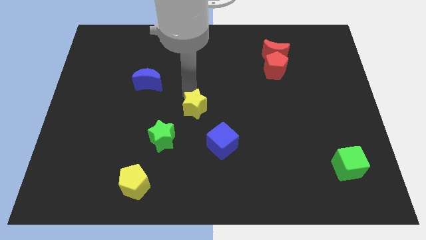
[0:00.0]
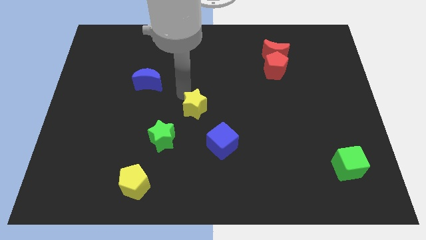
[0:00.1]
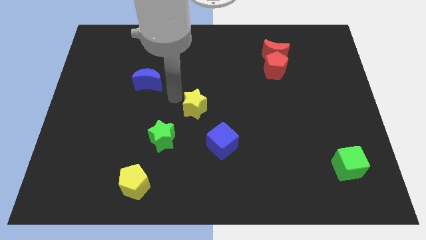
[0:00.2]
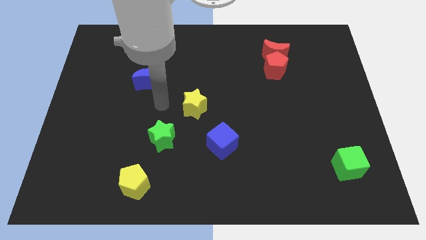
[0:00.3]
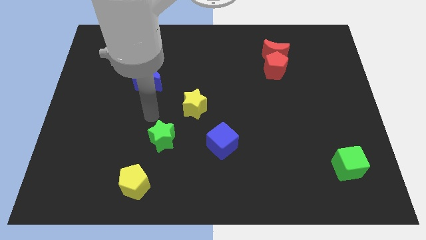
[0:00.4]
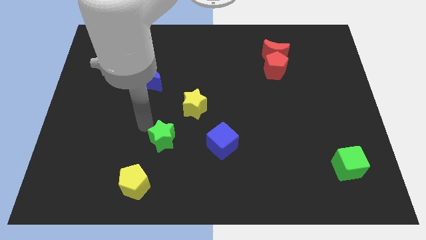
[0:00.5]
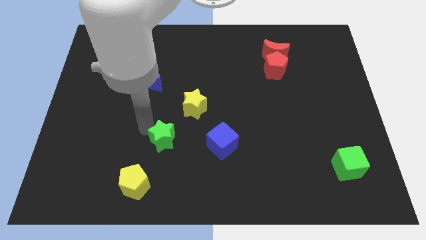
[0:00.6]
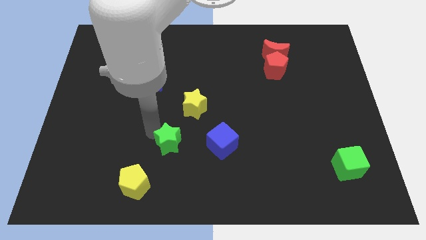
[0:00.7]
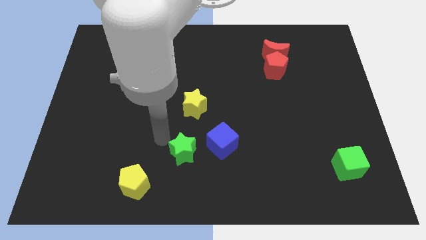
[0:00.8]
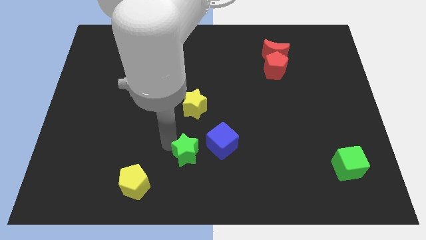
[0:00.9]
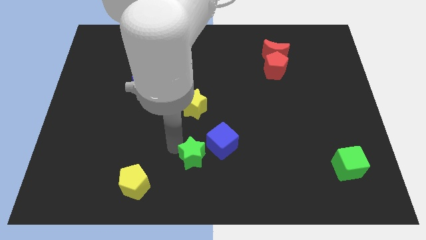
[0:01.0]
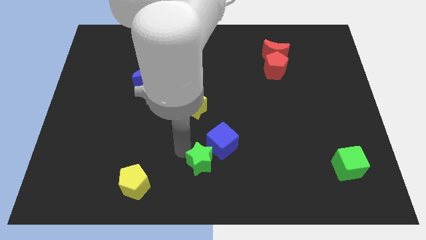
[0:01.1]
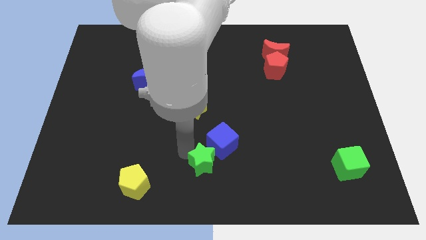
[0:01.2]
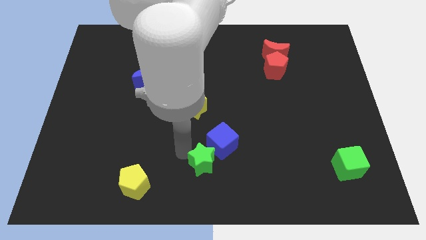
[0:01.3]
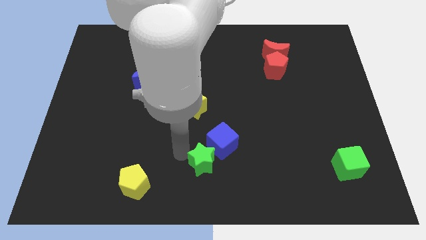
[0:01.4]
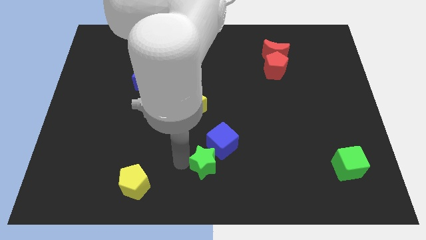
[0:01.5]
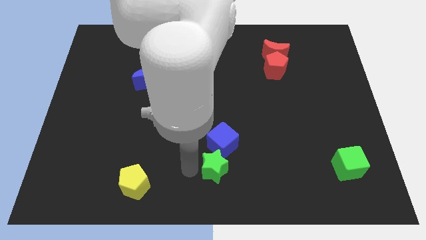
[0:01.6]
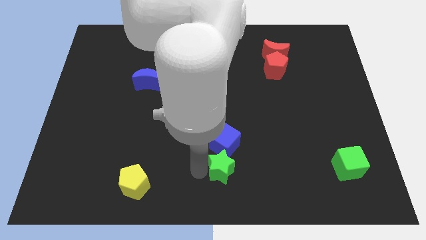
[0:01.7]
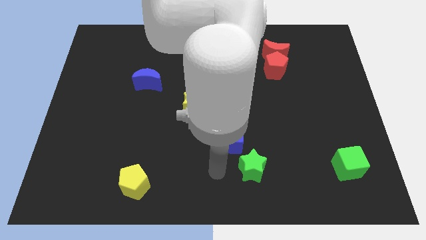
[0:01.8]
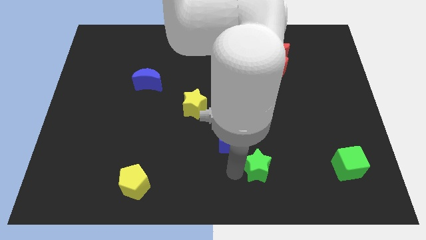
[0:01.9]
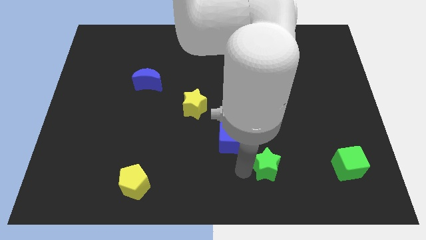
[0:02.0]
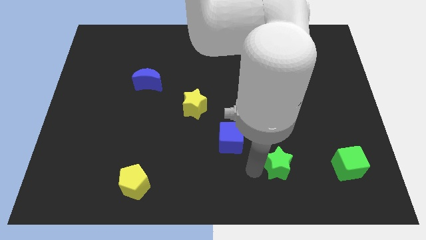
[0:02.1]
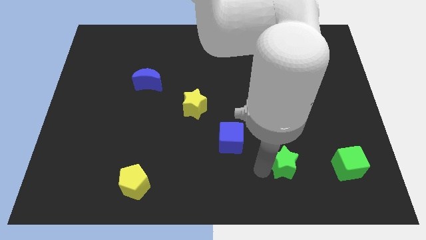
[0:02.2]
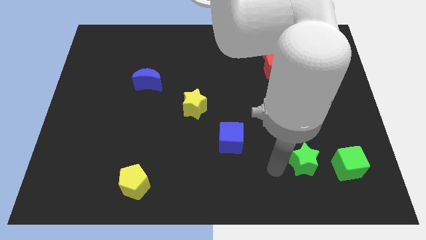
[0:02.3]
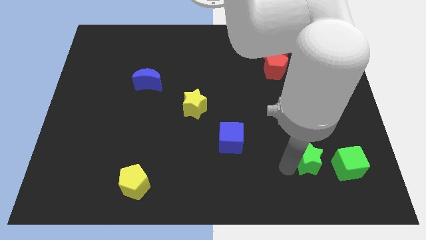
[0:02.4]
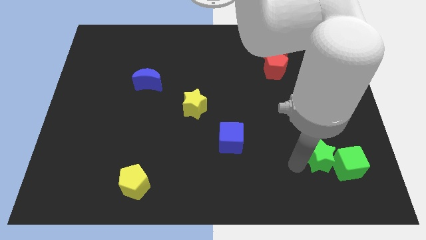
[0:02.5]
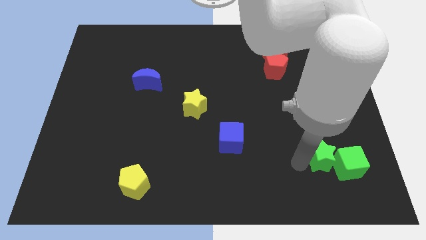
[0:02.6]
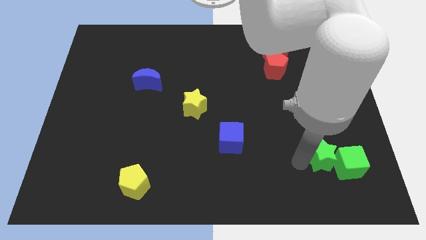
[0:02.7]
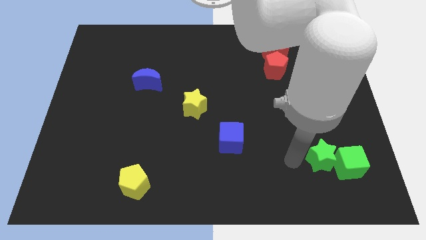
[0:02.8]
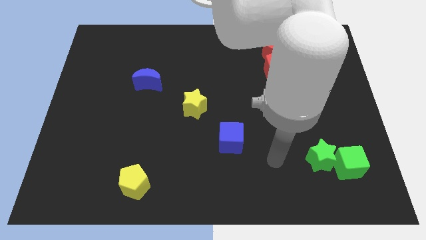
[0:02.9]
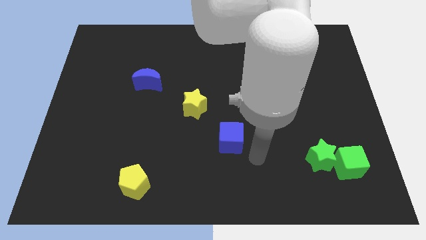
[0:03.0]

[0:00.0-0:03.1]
push the green star to the top left side of the green cube

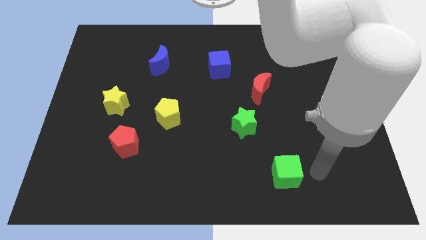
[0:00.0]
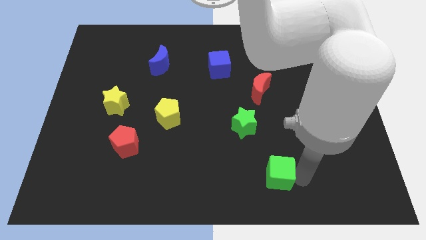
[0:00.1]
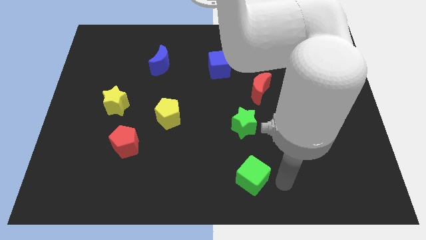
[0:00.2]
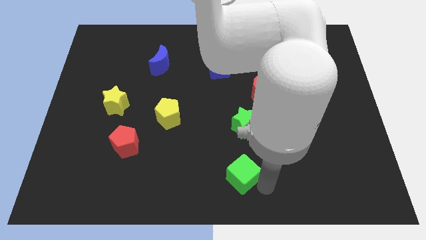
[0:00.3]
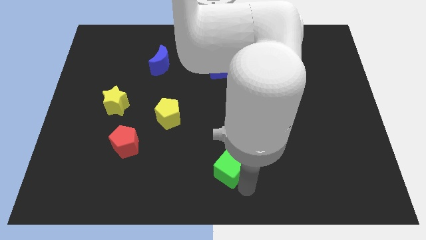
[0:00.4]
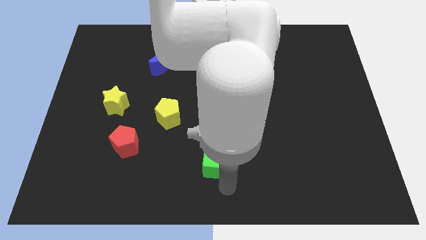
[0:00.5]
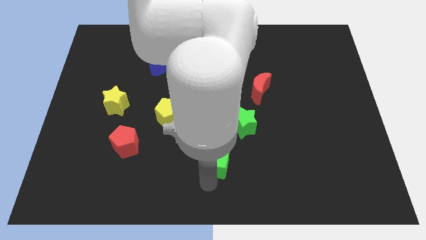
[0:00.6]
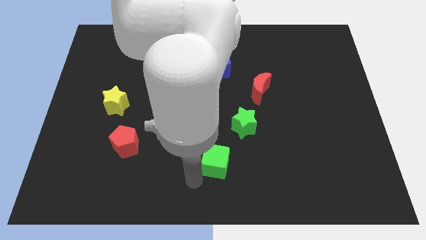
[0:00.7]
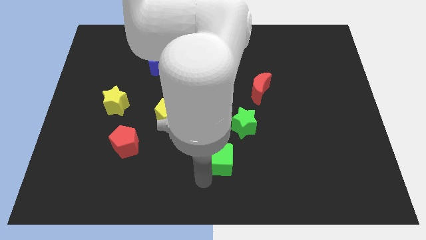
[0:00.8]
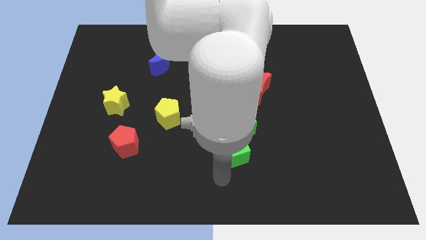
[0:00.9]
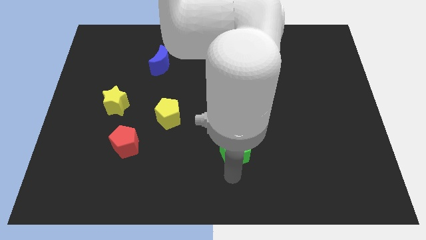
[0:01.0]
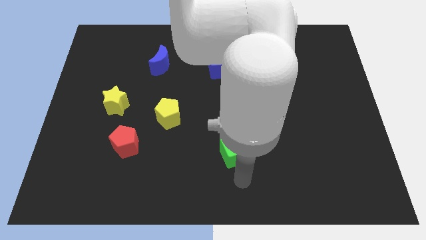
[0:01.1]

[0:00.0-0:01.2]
put the green cube below the green star

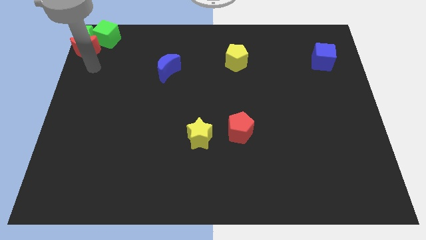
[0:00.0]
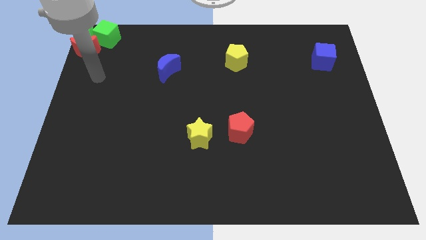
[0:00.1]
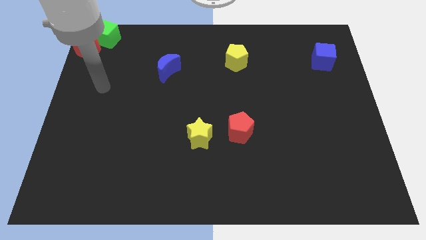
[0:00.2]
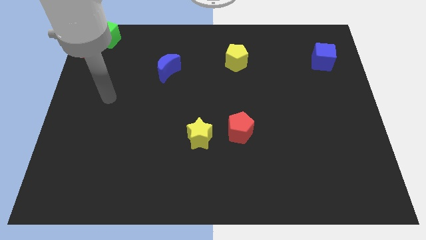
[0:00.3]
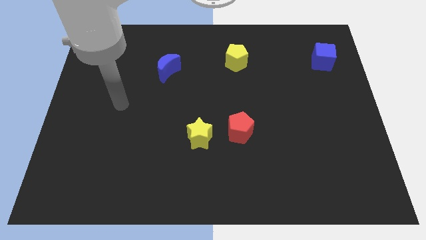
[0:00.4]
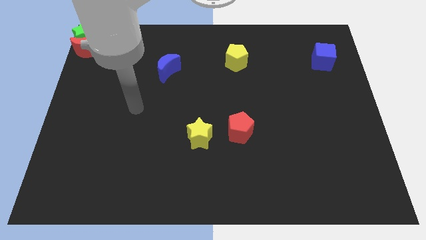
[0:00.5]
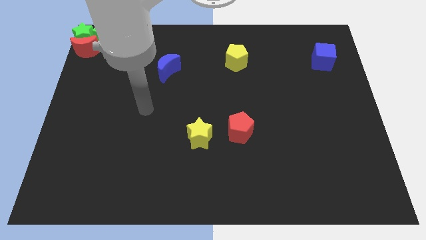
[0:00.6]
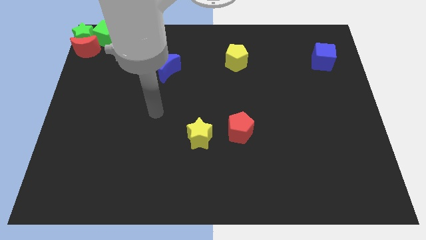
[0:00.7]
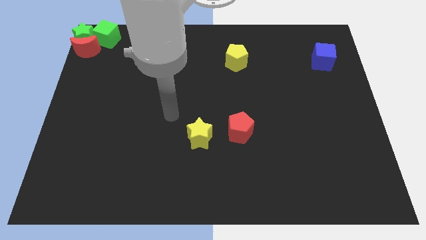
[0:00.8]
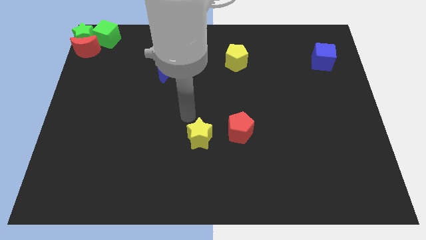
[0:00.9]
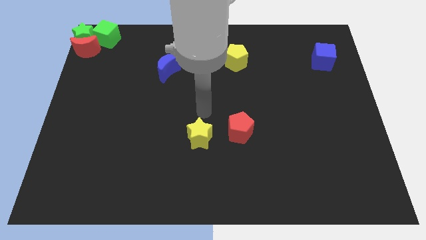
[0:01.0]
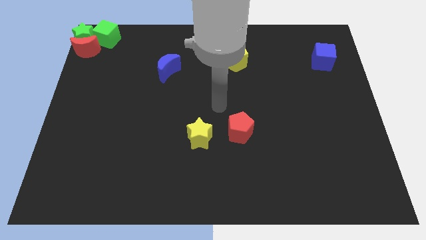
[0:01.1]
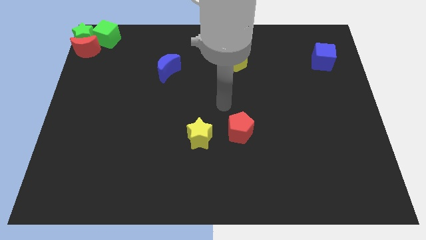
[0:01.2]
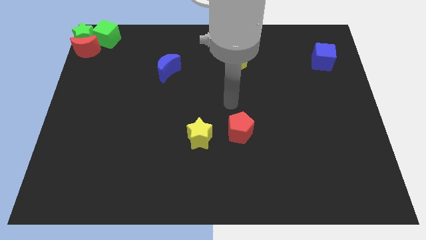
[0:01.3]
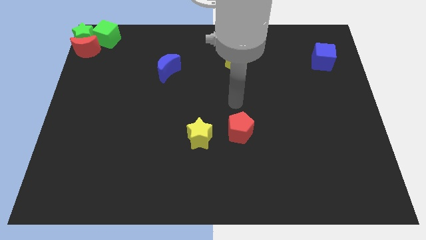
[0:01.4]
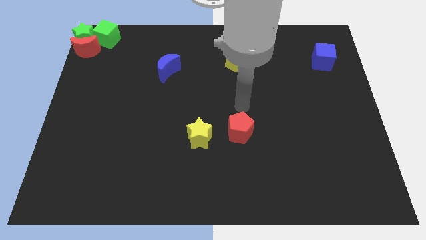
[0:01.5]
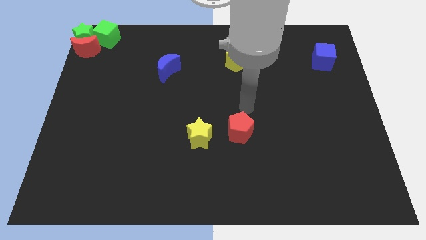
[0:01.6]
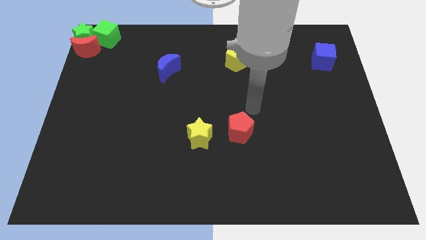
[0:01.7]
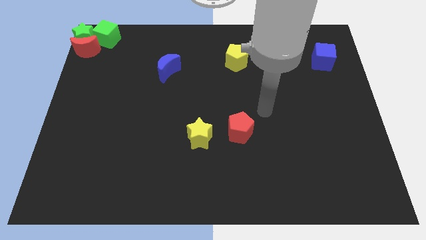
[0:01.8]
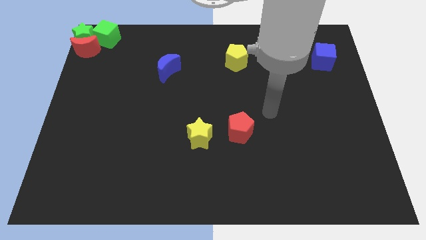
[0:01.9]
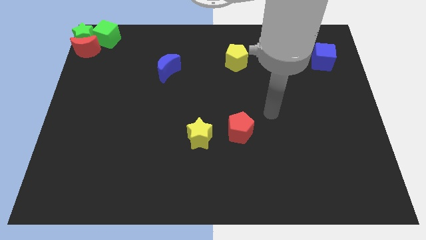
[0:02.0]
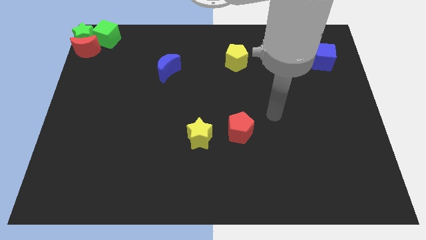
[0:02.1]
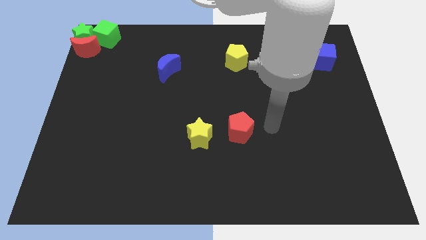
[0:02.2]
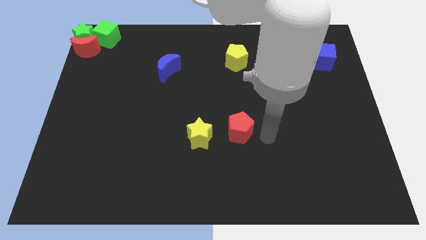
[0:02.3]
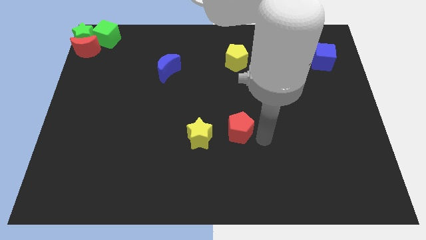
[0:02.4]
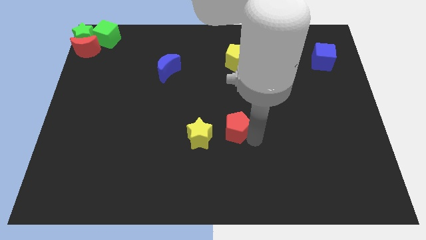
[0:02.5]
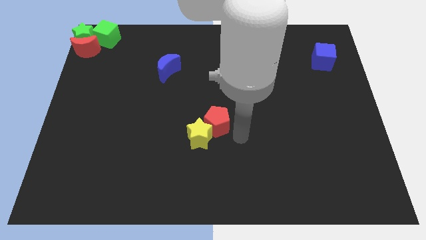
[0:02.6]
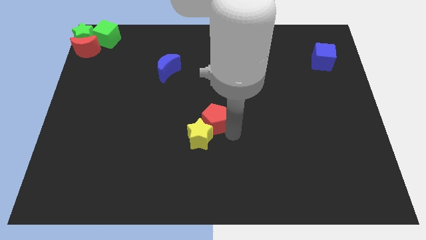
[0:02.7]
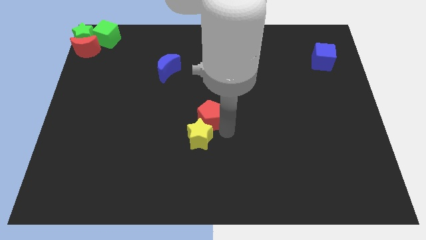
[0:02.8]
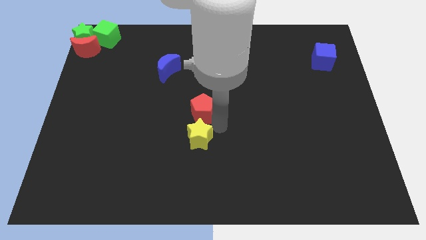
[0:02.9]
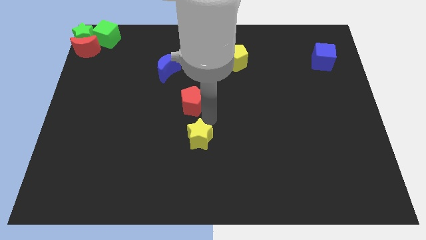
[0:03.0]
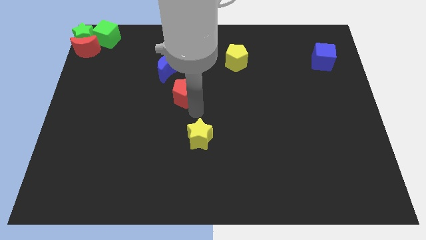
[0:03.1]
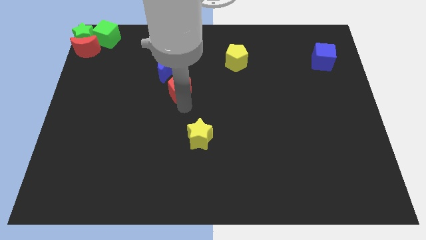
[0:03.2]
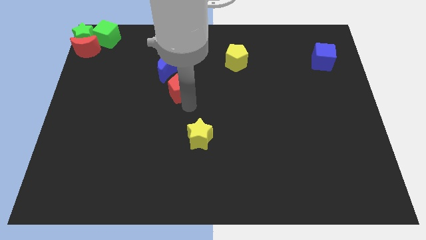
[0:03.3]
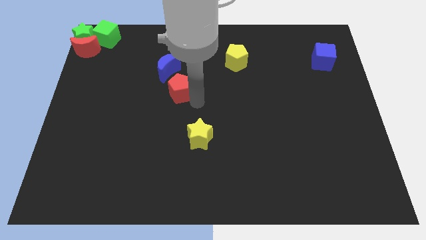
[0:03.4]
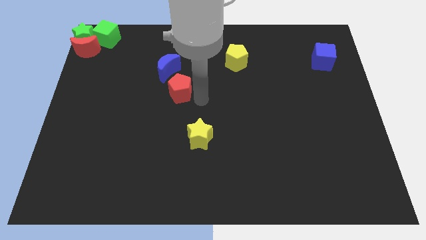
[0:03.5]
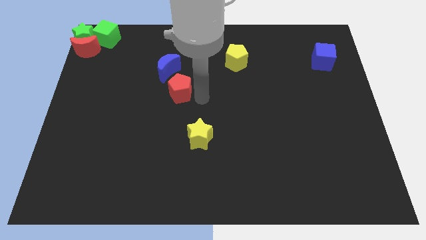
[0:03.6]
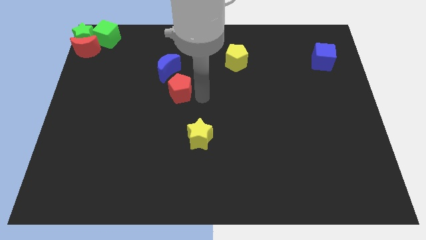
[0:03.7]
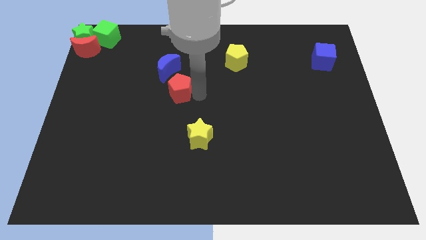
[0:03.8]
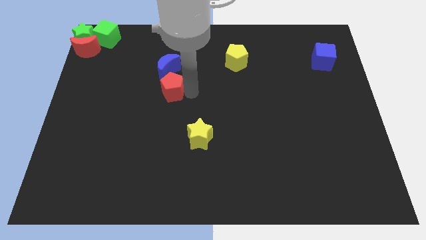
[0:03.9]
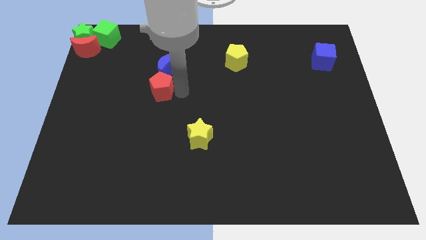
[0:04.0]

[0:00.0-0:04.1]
place red pentagon to the bottom of blue moon

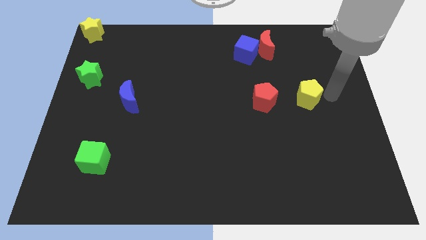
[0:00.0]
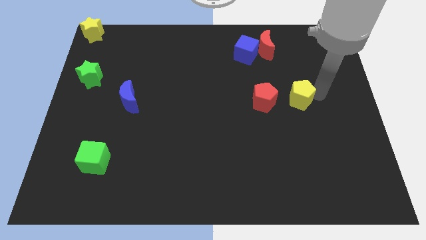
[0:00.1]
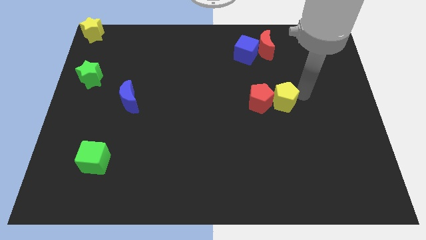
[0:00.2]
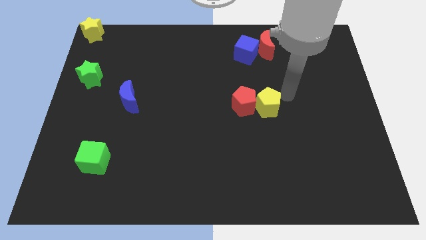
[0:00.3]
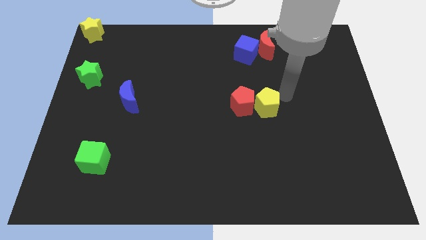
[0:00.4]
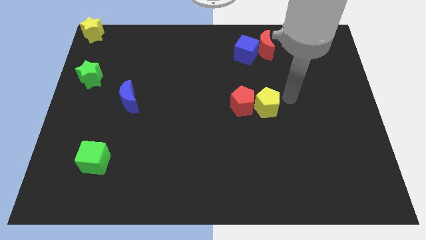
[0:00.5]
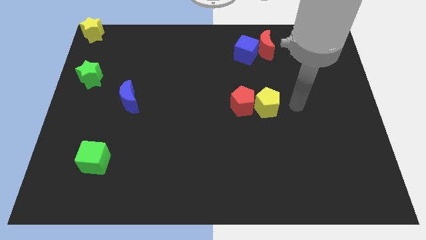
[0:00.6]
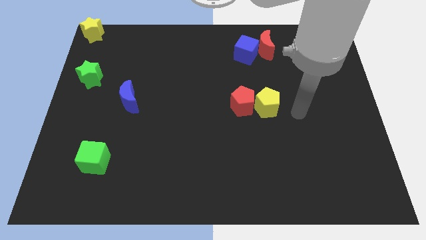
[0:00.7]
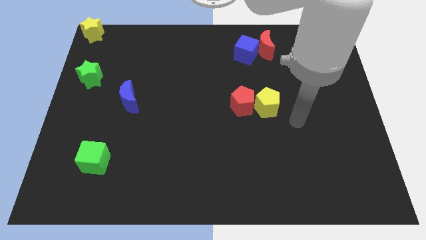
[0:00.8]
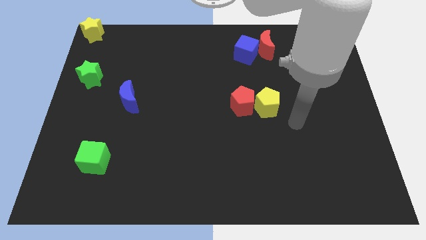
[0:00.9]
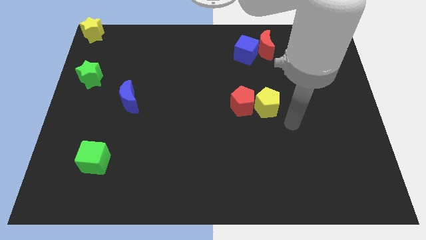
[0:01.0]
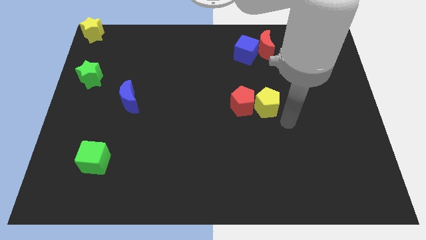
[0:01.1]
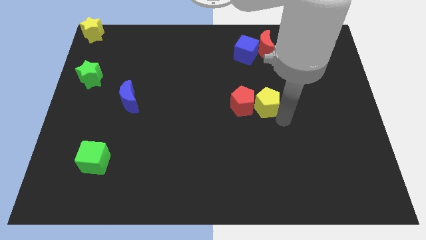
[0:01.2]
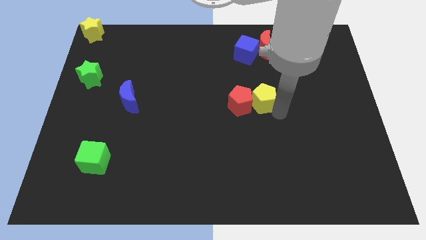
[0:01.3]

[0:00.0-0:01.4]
push the pentagons towards the center of the board
